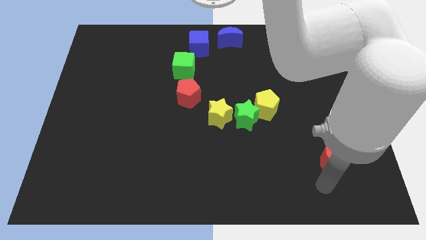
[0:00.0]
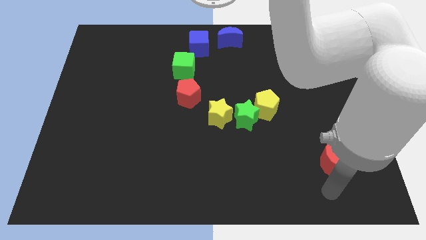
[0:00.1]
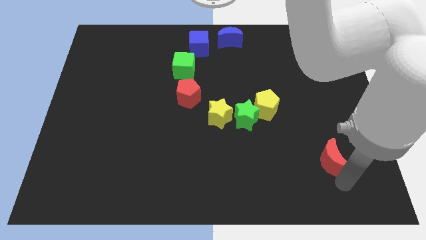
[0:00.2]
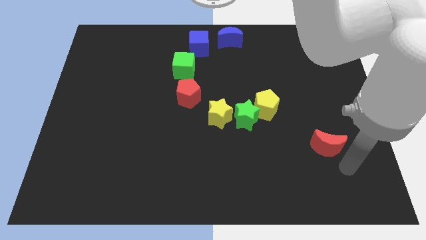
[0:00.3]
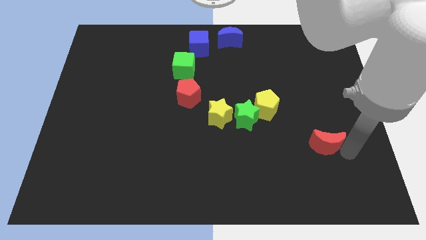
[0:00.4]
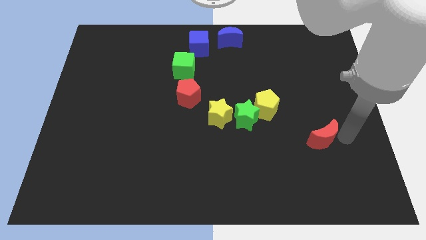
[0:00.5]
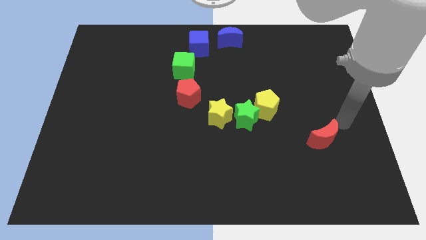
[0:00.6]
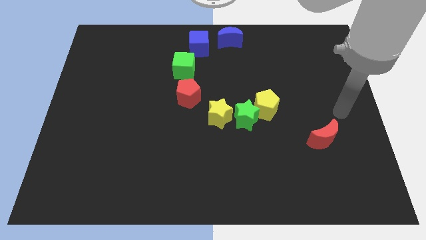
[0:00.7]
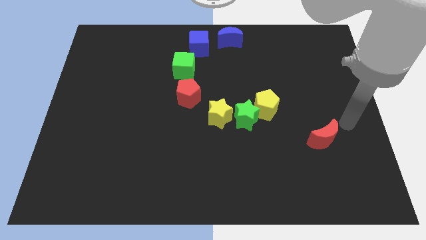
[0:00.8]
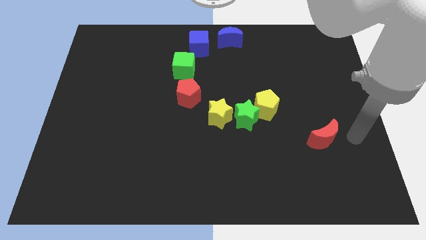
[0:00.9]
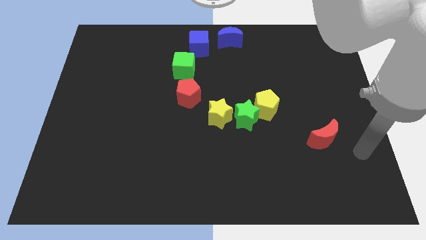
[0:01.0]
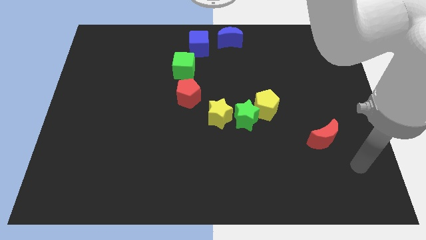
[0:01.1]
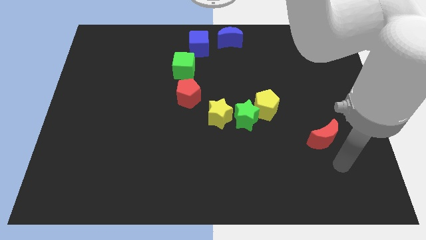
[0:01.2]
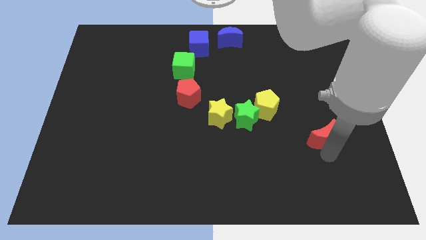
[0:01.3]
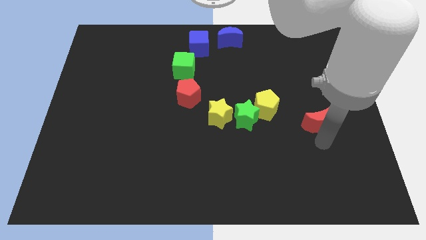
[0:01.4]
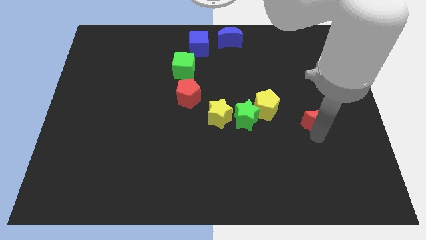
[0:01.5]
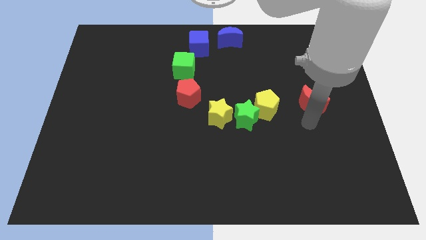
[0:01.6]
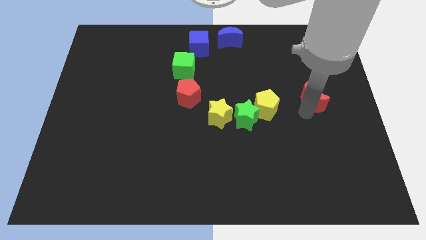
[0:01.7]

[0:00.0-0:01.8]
move the red moon to the right of the yellow pentagon

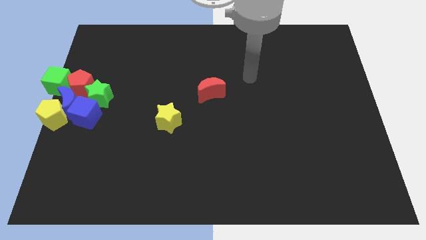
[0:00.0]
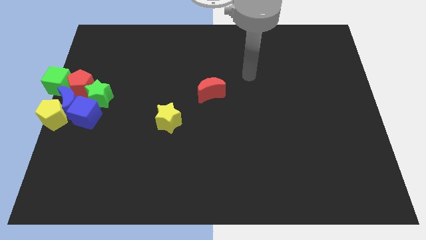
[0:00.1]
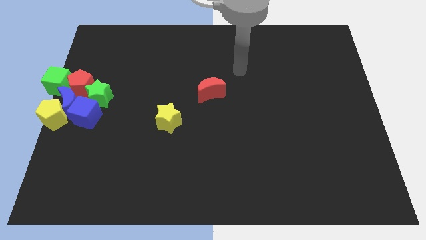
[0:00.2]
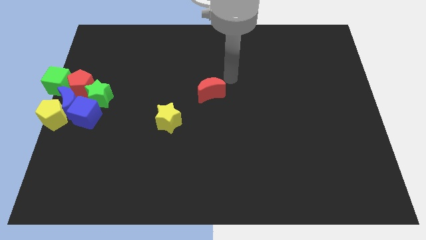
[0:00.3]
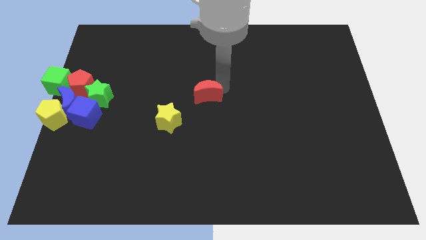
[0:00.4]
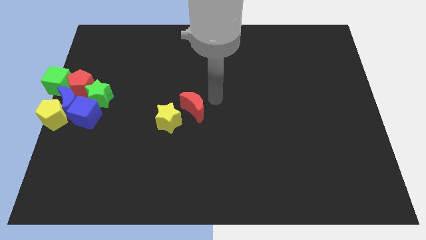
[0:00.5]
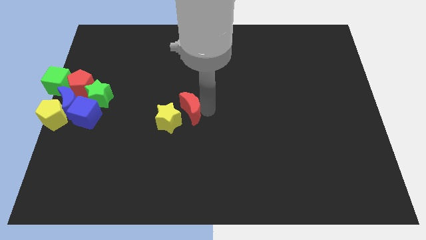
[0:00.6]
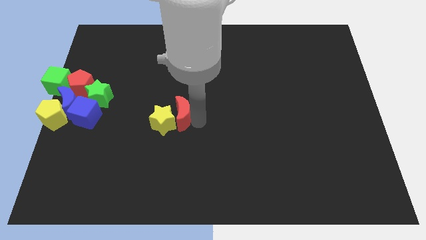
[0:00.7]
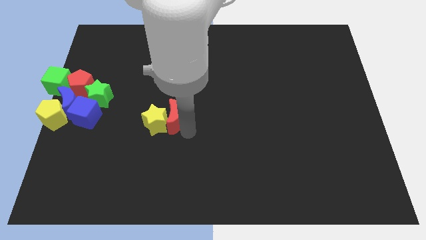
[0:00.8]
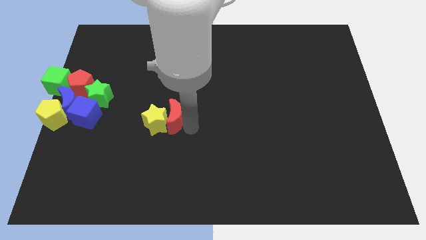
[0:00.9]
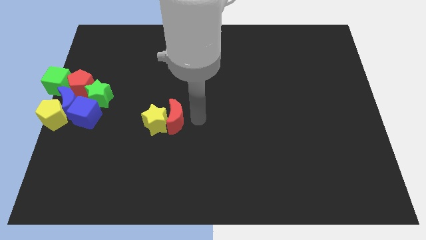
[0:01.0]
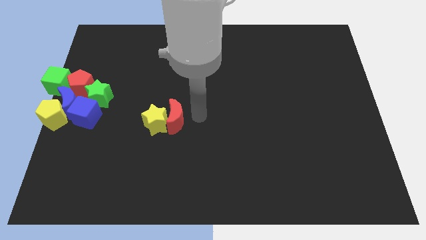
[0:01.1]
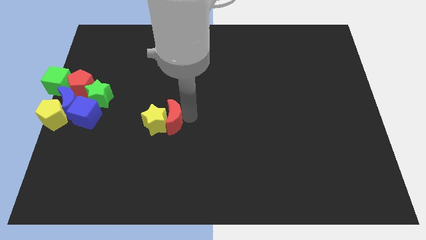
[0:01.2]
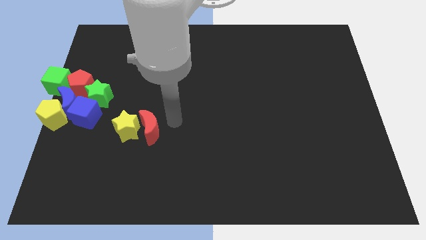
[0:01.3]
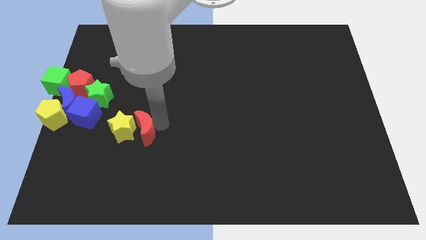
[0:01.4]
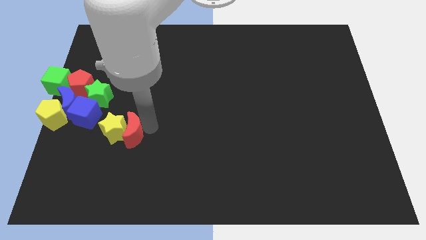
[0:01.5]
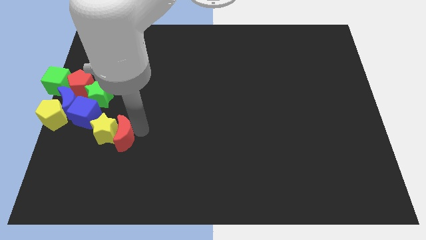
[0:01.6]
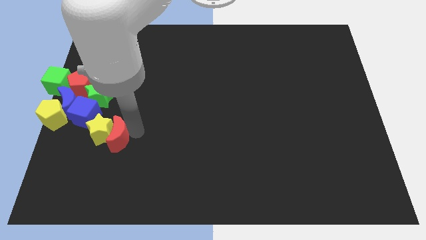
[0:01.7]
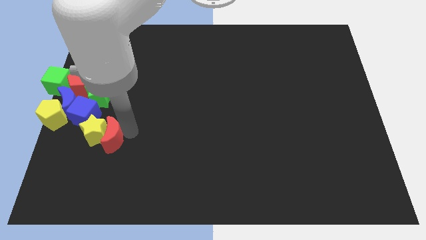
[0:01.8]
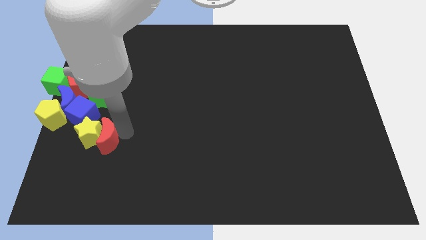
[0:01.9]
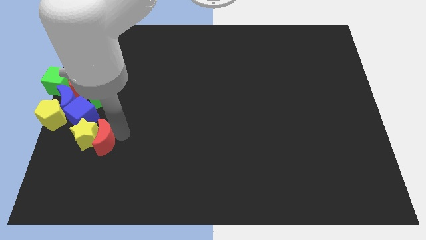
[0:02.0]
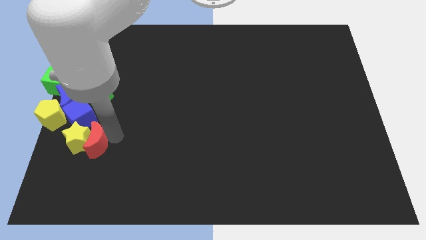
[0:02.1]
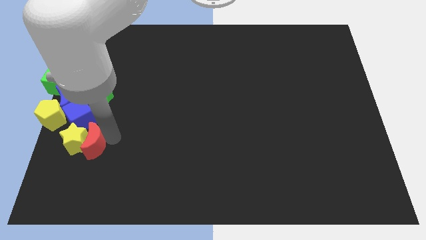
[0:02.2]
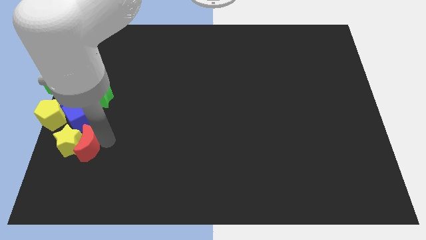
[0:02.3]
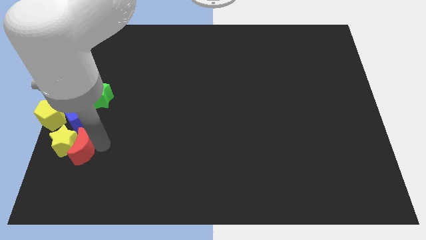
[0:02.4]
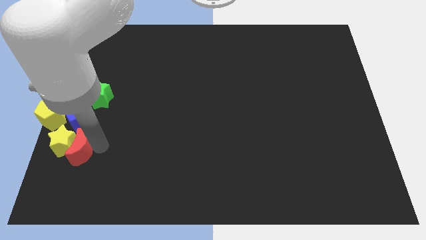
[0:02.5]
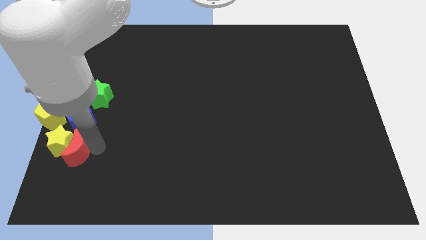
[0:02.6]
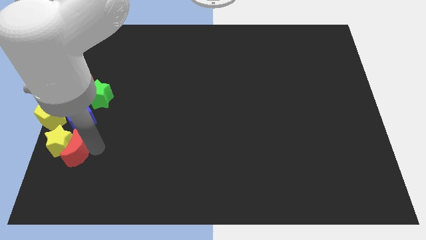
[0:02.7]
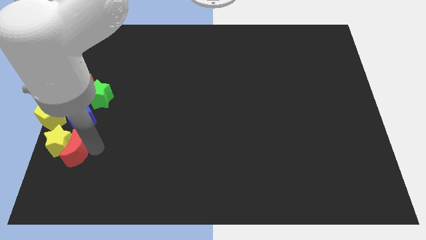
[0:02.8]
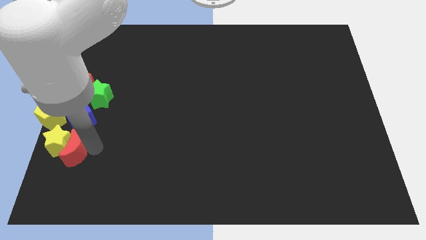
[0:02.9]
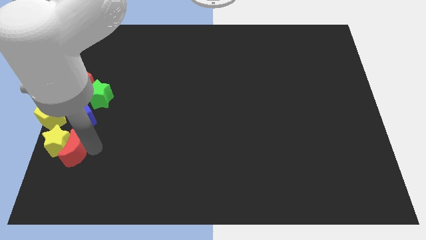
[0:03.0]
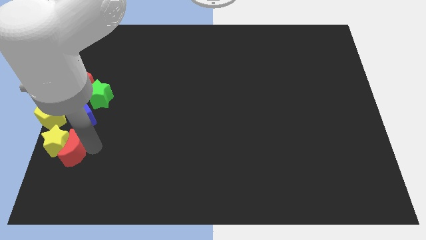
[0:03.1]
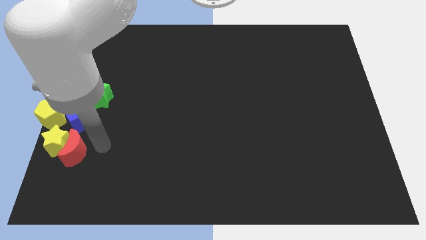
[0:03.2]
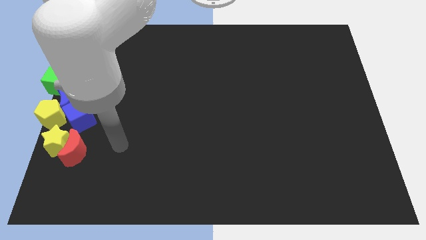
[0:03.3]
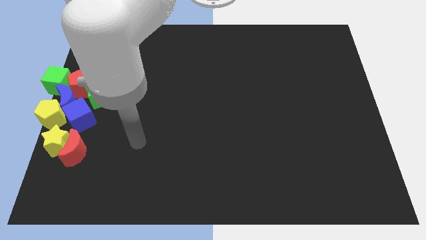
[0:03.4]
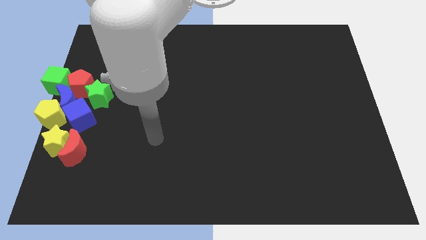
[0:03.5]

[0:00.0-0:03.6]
push the yellow star with red crescent towards the bottom of the yellow pentagon

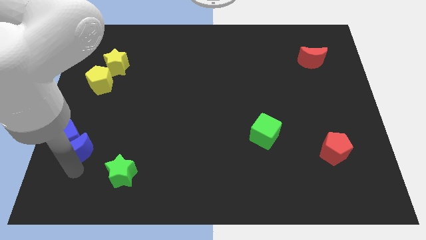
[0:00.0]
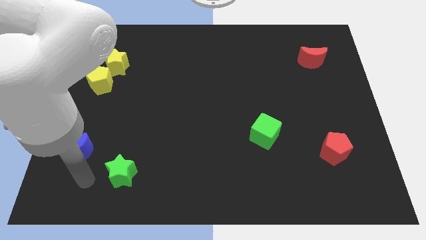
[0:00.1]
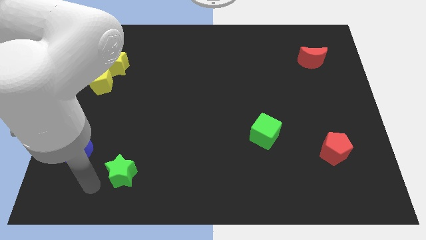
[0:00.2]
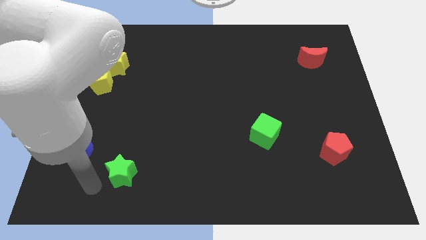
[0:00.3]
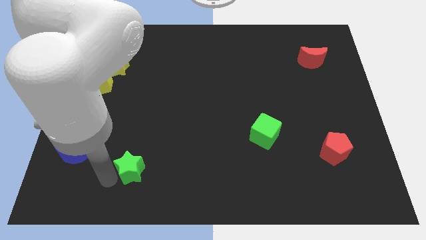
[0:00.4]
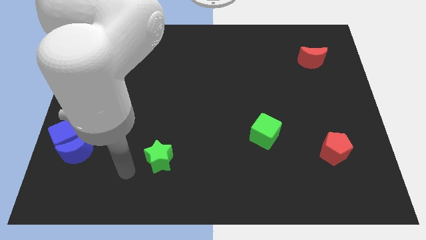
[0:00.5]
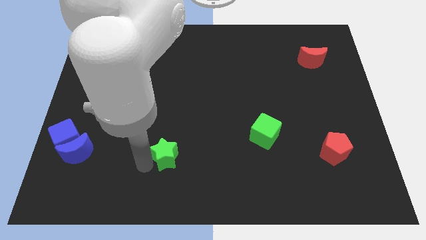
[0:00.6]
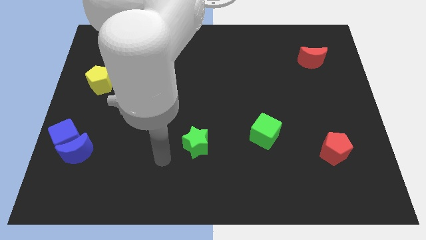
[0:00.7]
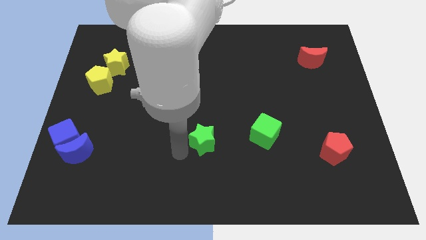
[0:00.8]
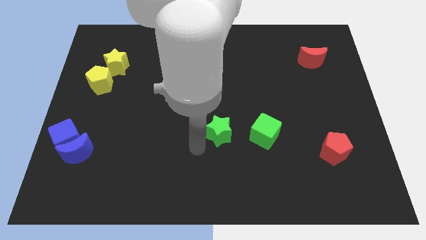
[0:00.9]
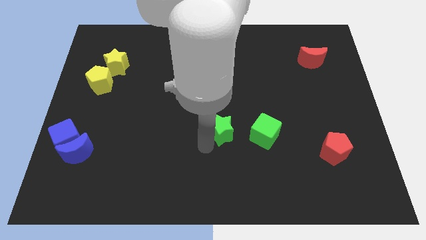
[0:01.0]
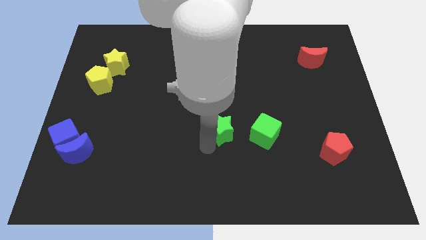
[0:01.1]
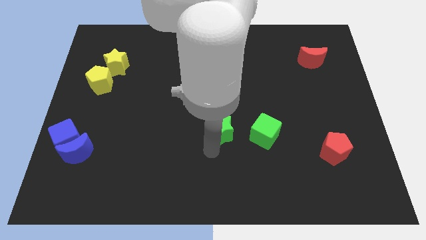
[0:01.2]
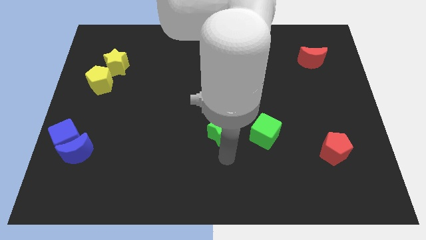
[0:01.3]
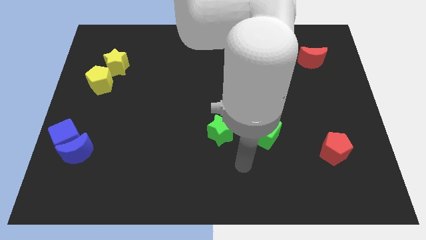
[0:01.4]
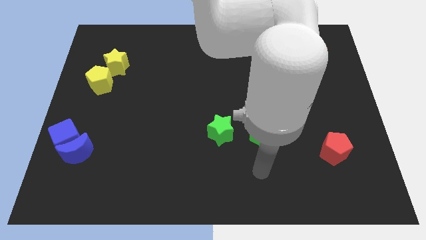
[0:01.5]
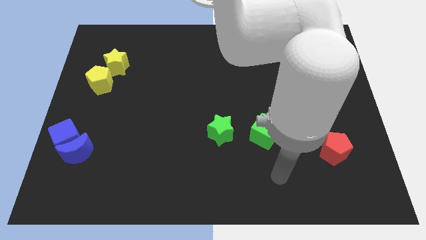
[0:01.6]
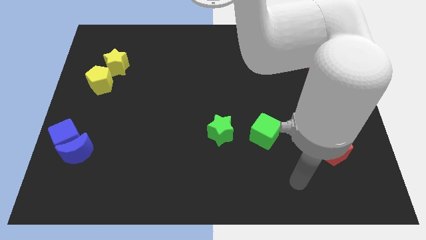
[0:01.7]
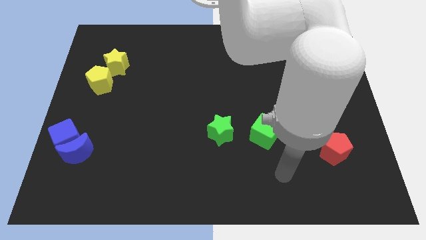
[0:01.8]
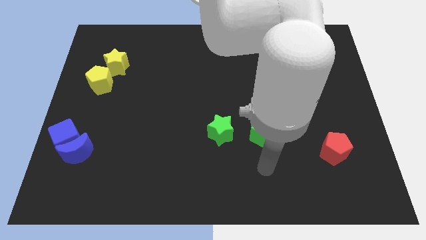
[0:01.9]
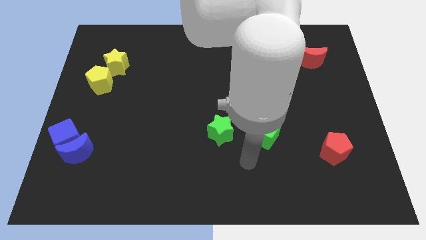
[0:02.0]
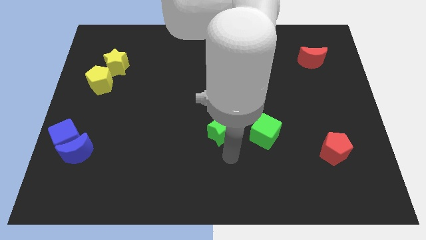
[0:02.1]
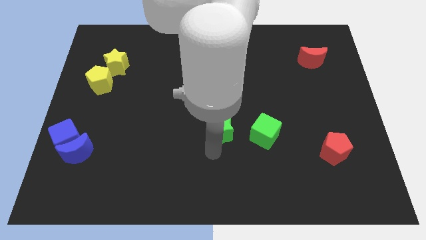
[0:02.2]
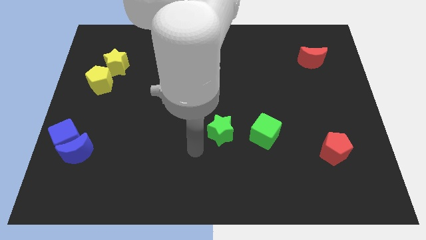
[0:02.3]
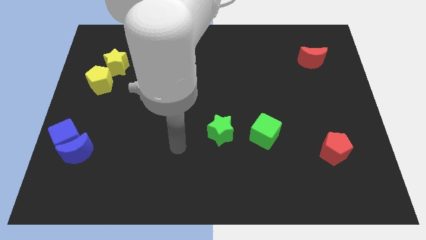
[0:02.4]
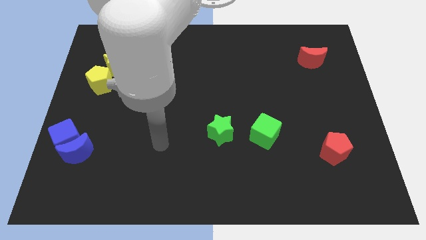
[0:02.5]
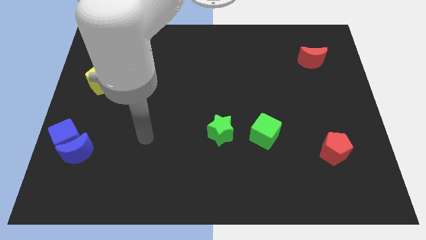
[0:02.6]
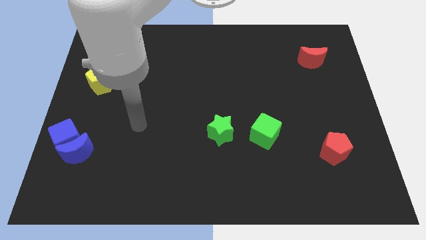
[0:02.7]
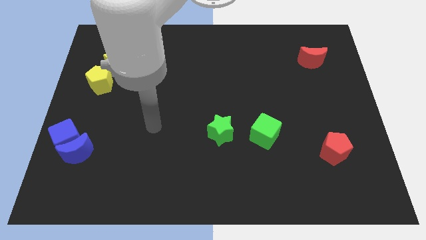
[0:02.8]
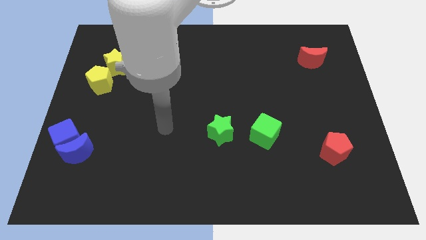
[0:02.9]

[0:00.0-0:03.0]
place the green star parallel to green cube

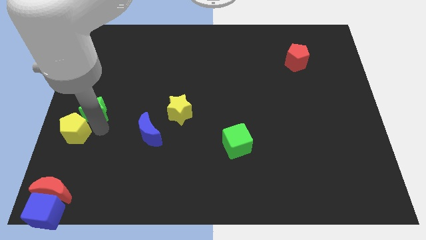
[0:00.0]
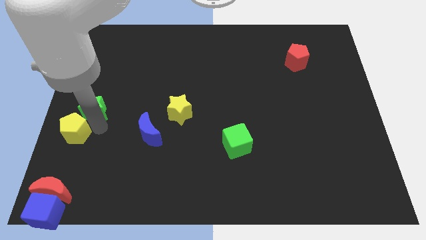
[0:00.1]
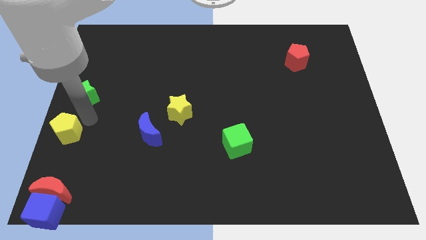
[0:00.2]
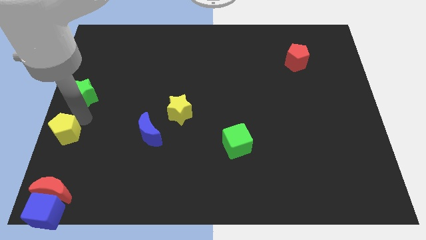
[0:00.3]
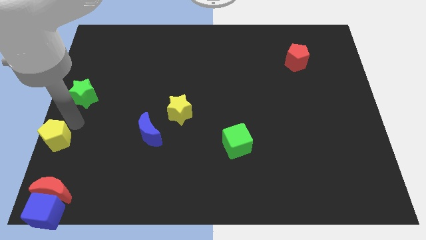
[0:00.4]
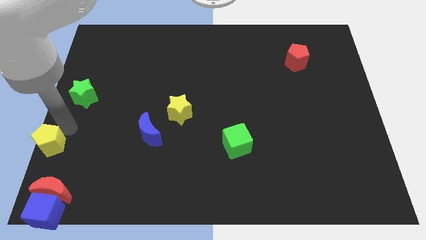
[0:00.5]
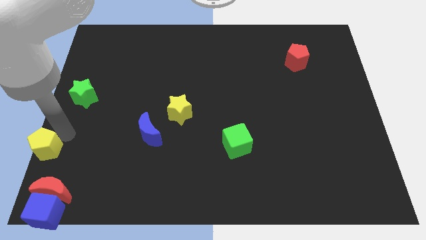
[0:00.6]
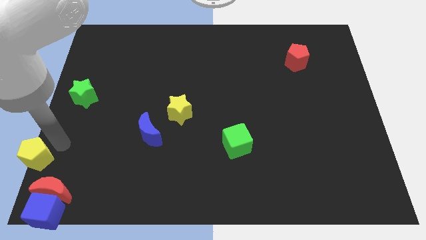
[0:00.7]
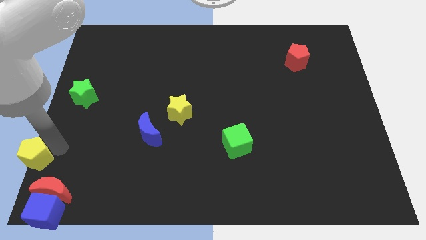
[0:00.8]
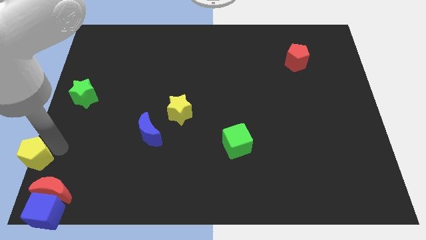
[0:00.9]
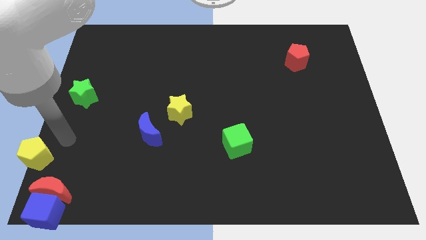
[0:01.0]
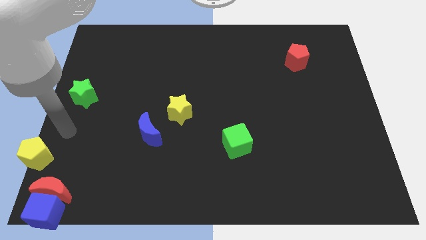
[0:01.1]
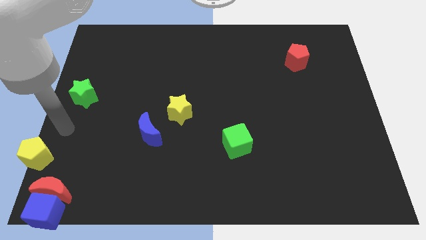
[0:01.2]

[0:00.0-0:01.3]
separate the yellow pentagon from the green star
